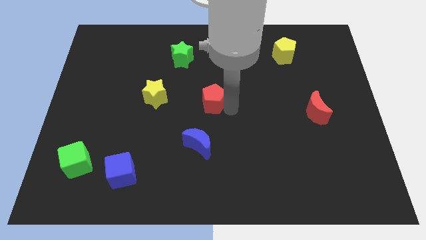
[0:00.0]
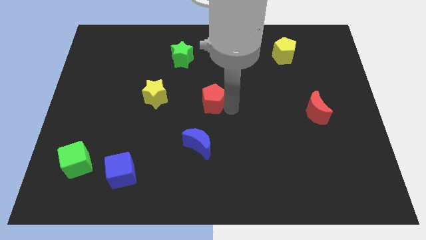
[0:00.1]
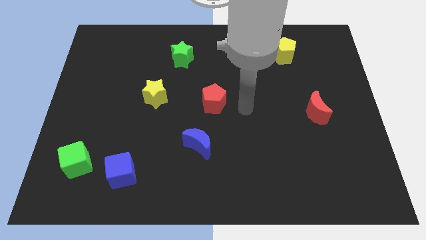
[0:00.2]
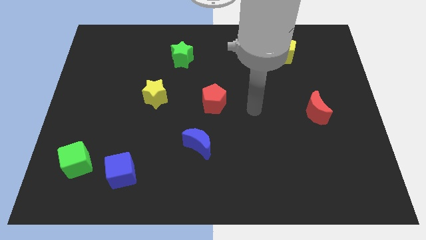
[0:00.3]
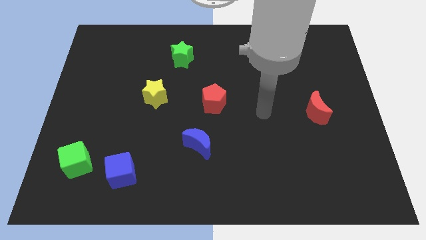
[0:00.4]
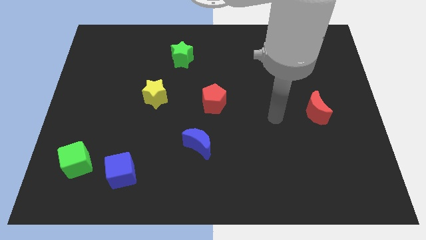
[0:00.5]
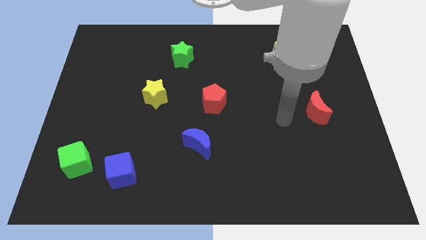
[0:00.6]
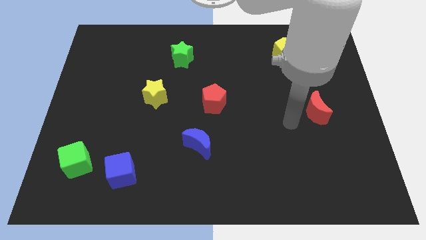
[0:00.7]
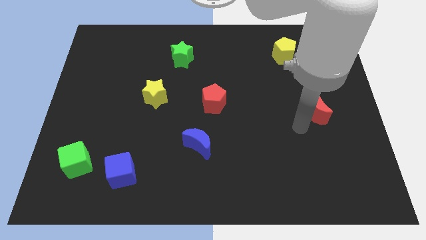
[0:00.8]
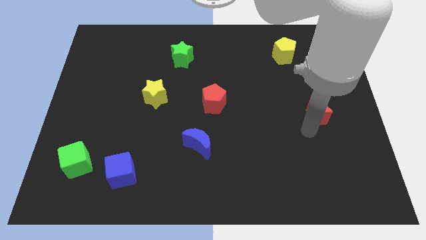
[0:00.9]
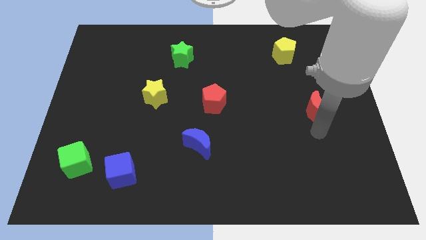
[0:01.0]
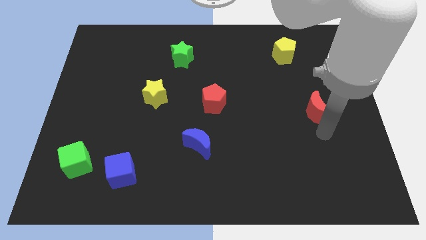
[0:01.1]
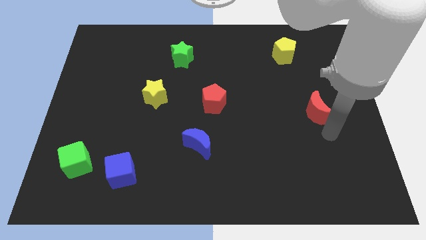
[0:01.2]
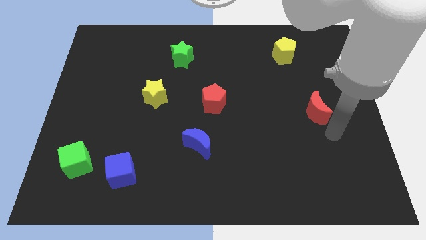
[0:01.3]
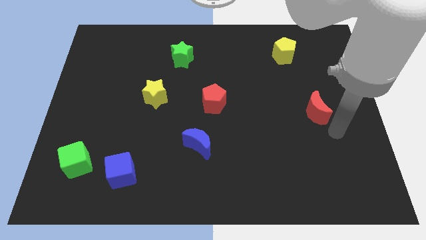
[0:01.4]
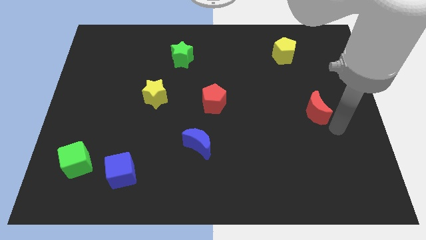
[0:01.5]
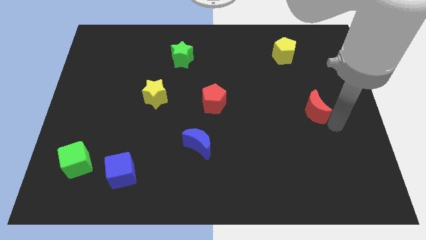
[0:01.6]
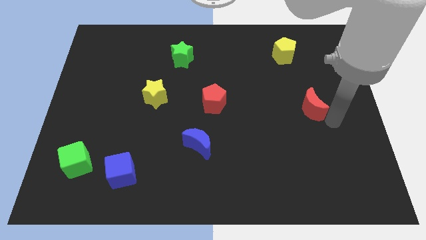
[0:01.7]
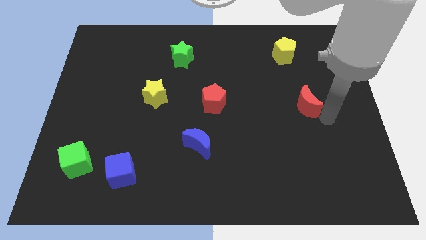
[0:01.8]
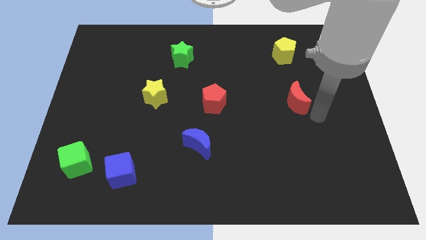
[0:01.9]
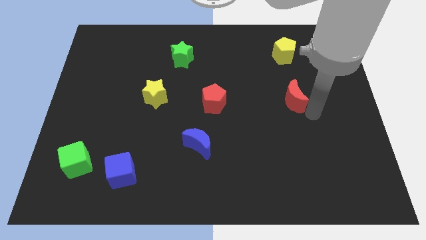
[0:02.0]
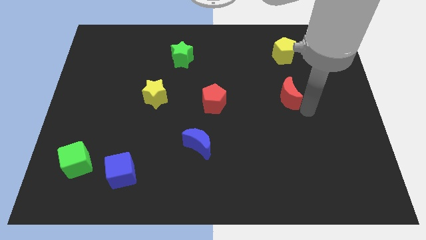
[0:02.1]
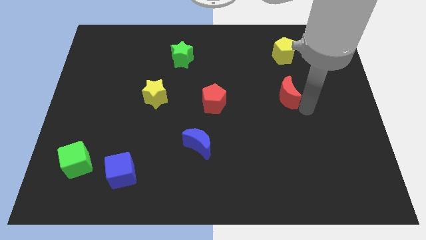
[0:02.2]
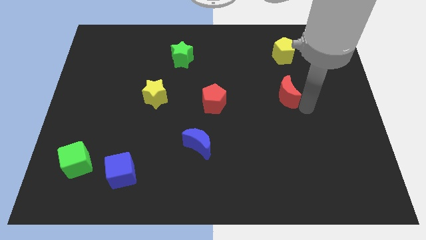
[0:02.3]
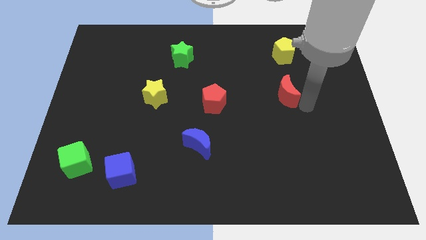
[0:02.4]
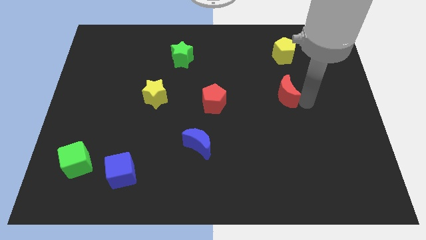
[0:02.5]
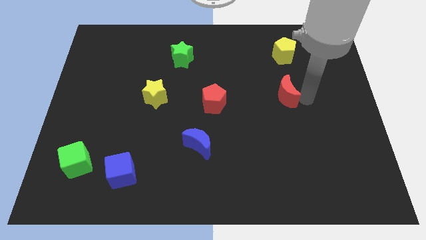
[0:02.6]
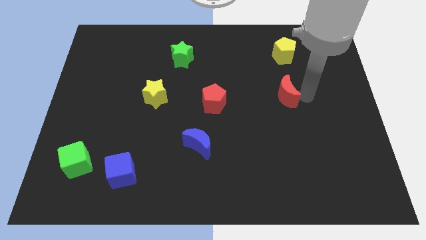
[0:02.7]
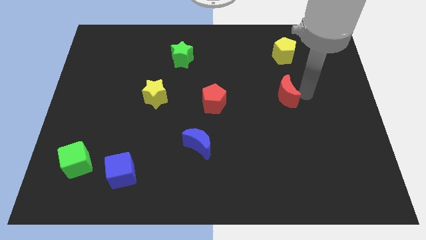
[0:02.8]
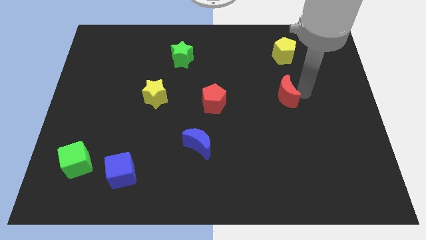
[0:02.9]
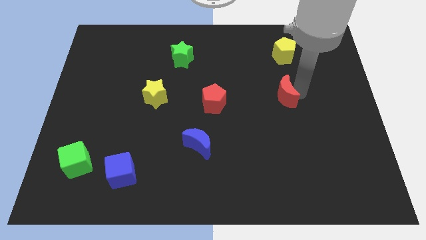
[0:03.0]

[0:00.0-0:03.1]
push the red crescent parallel to the yellow pentagon

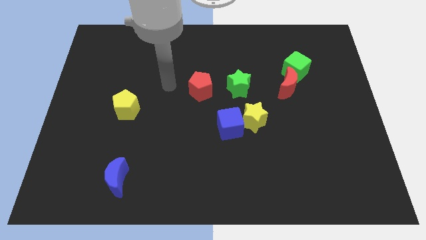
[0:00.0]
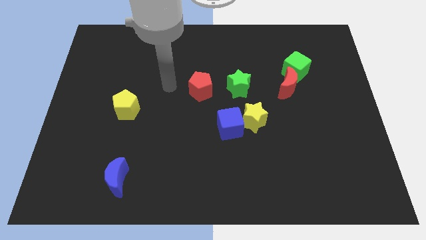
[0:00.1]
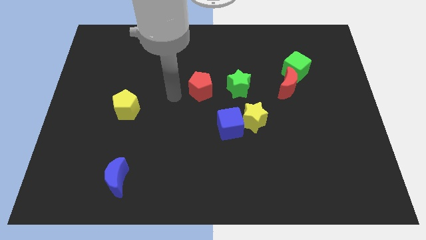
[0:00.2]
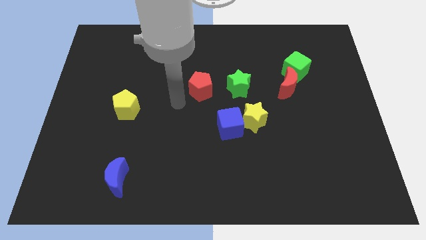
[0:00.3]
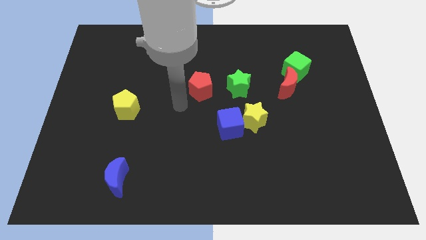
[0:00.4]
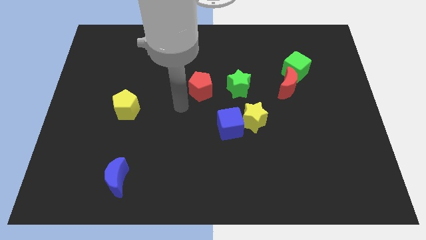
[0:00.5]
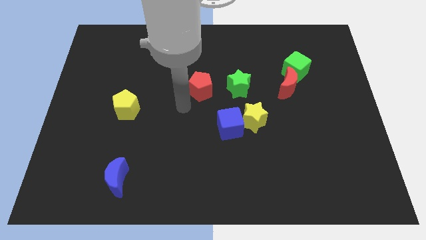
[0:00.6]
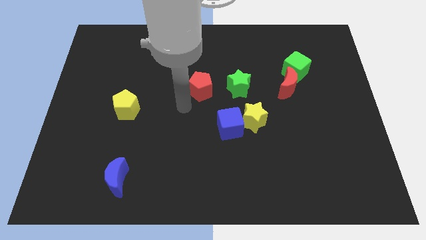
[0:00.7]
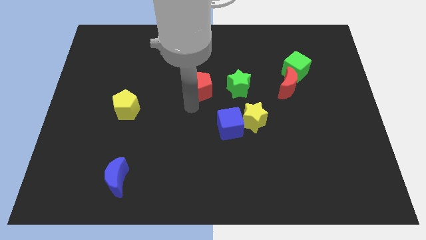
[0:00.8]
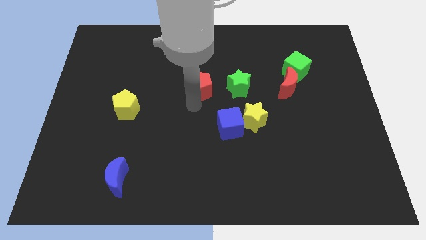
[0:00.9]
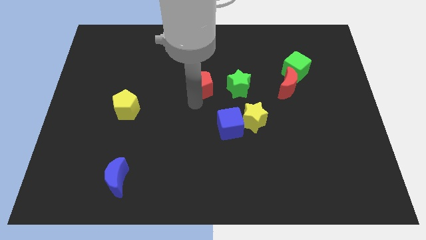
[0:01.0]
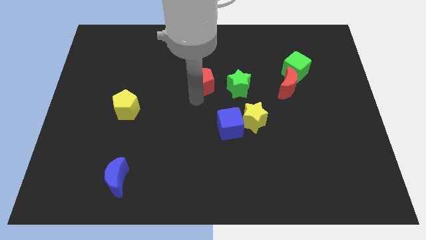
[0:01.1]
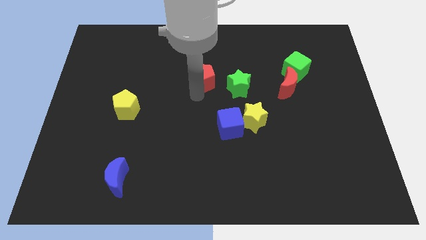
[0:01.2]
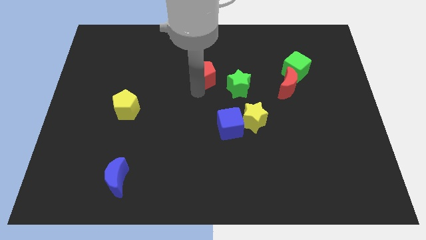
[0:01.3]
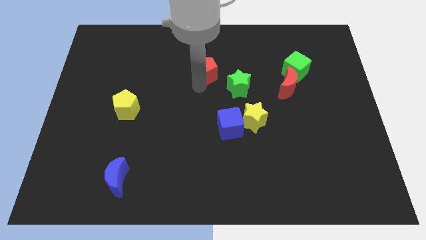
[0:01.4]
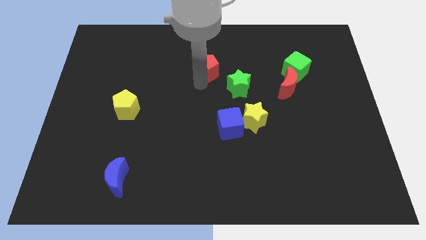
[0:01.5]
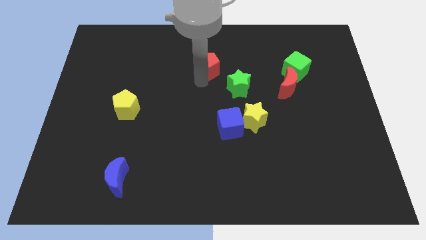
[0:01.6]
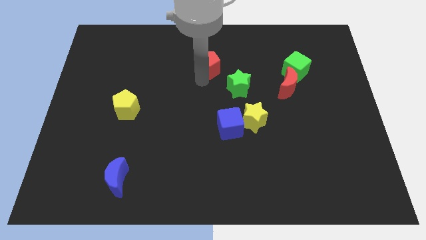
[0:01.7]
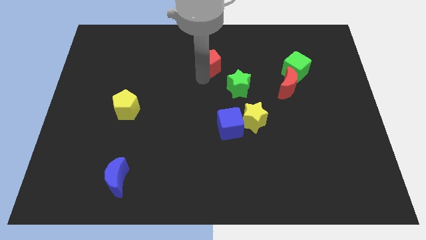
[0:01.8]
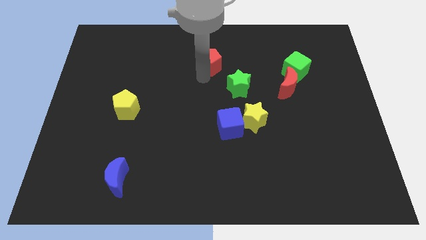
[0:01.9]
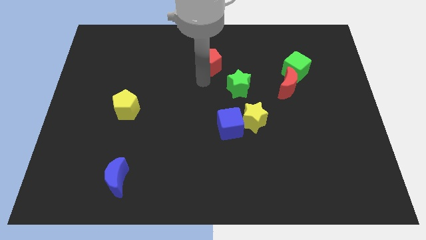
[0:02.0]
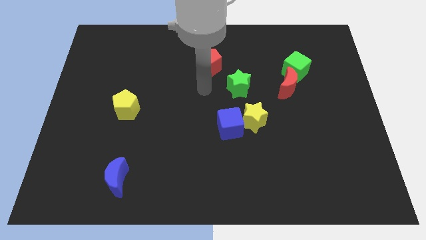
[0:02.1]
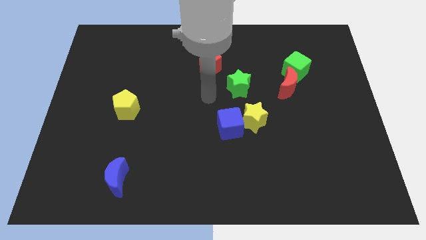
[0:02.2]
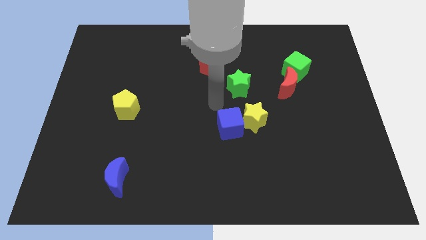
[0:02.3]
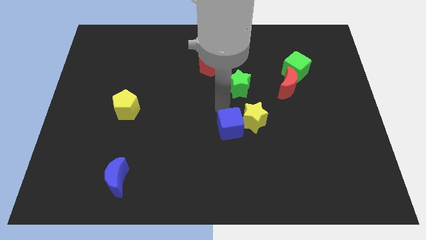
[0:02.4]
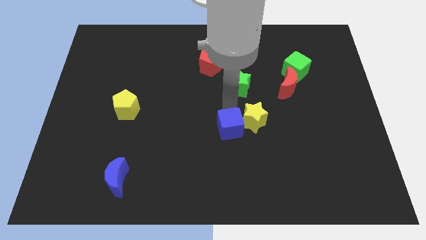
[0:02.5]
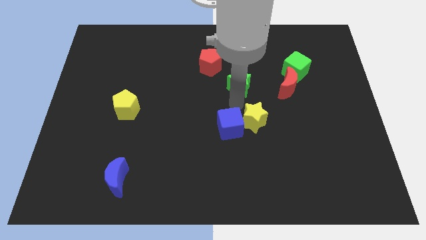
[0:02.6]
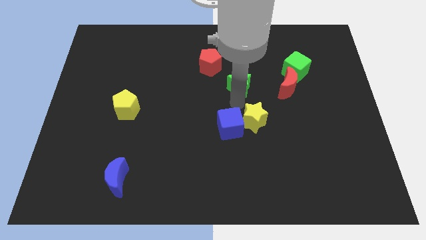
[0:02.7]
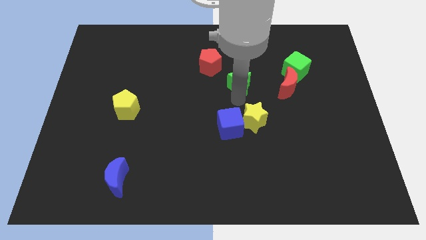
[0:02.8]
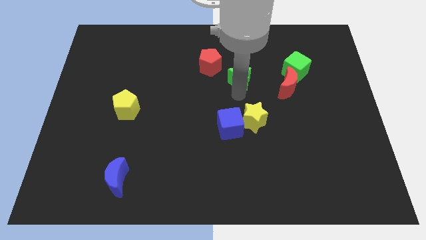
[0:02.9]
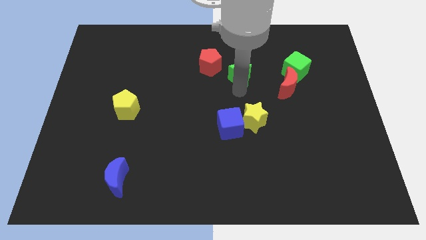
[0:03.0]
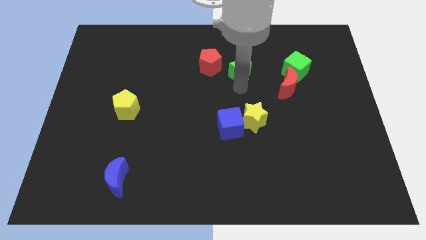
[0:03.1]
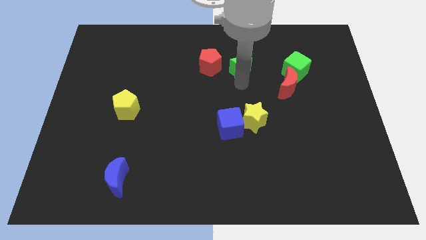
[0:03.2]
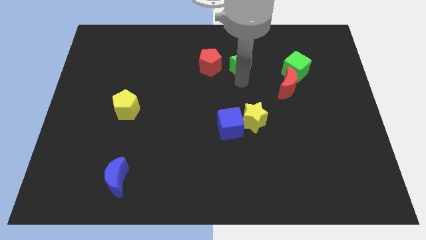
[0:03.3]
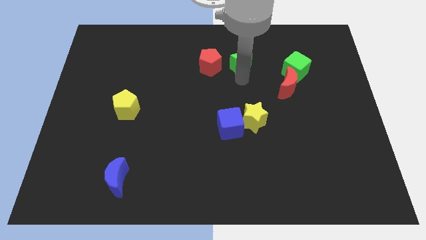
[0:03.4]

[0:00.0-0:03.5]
place green star and red pentagon towards the top center

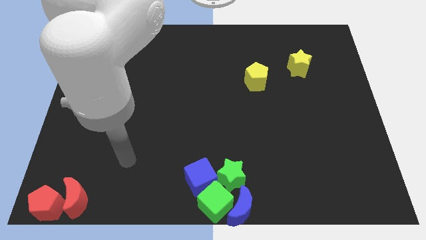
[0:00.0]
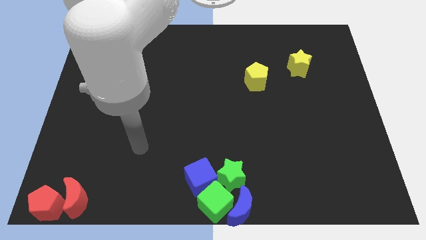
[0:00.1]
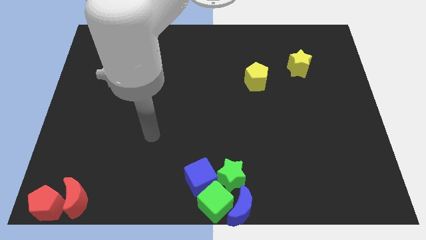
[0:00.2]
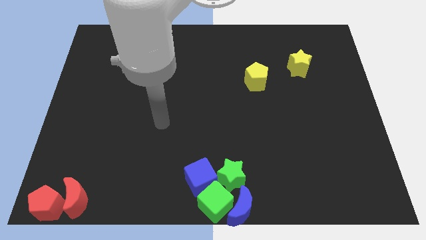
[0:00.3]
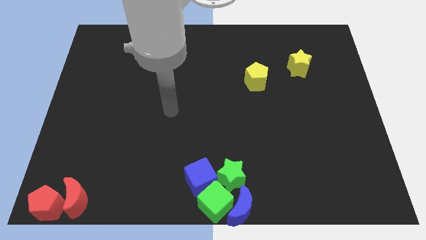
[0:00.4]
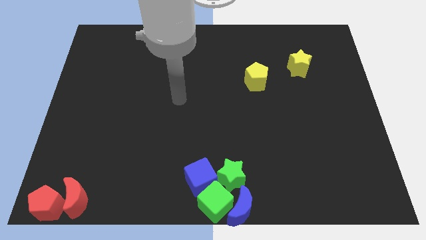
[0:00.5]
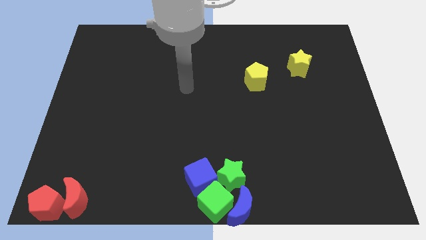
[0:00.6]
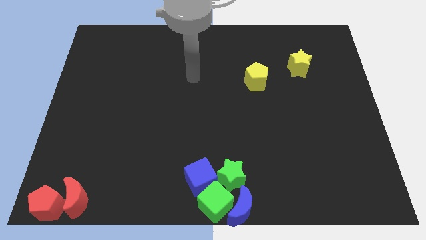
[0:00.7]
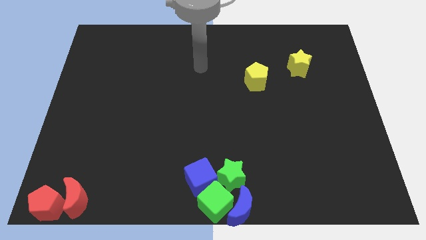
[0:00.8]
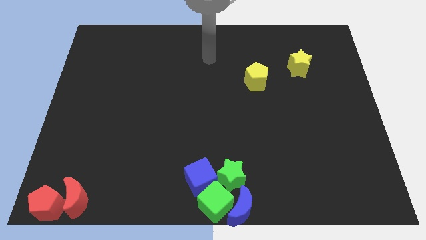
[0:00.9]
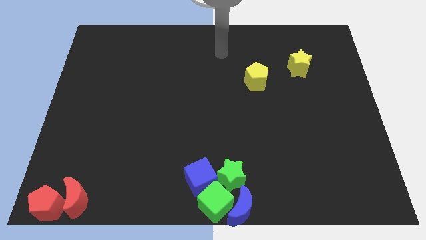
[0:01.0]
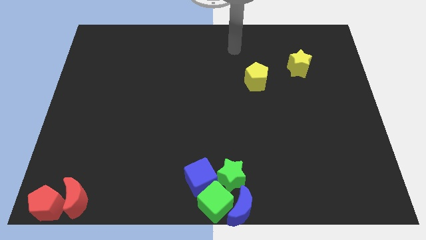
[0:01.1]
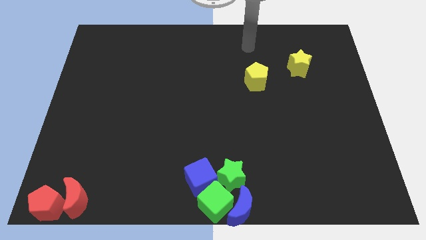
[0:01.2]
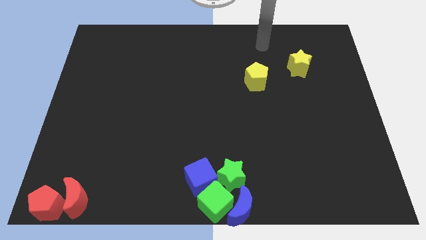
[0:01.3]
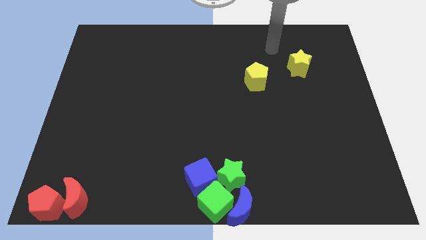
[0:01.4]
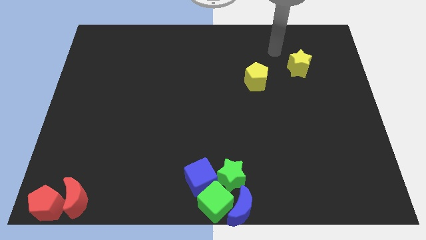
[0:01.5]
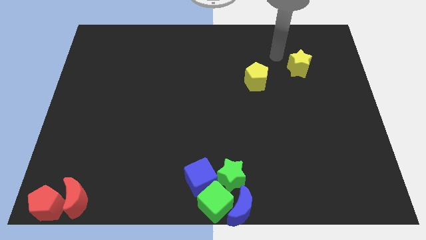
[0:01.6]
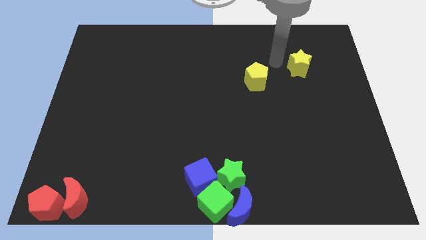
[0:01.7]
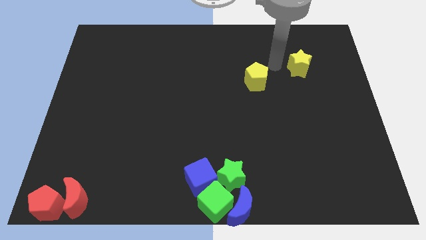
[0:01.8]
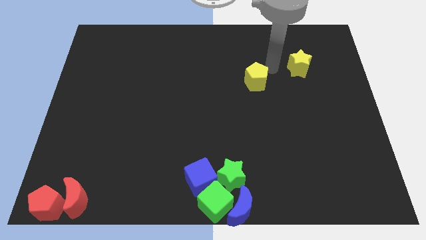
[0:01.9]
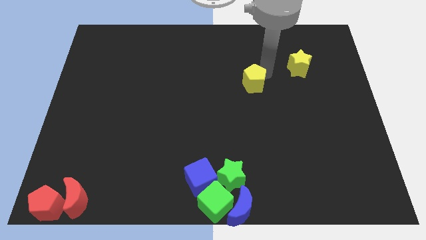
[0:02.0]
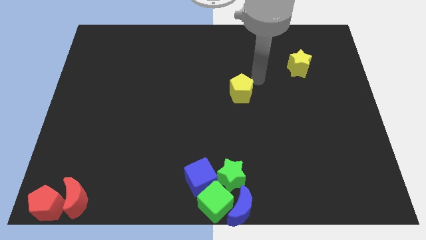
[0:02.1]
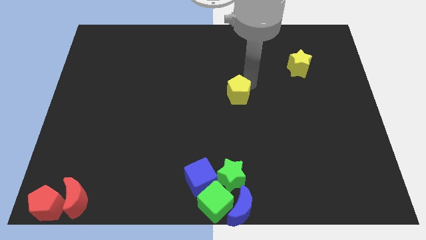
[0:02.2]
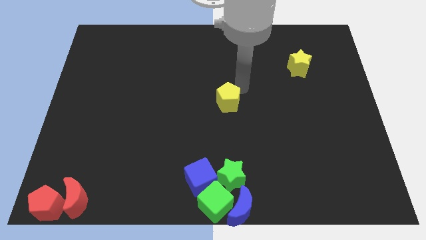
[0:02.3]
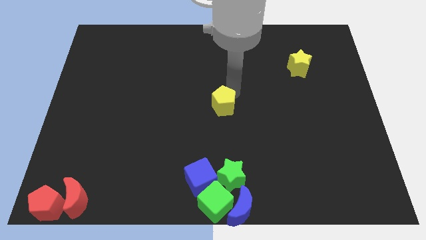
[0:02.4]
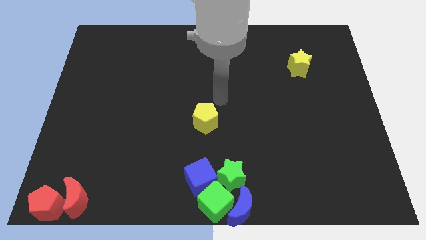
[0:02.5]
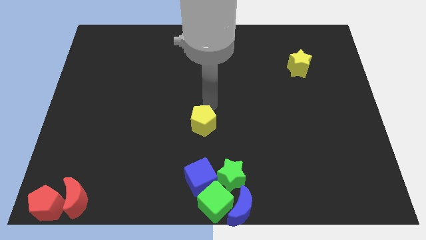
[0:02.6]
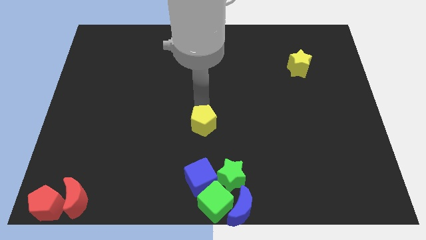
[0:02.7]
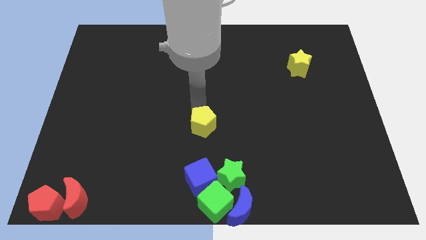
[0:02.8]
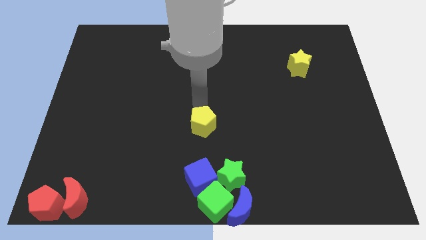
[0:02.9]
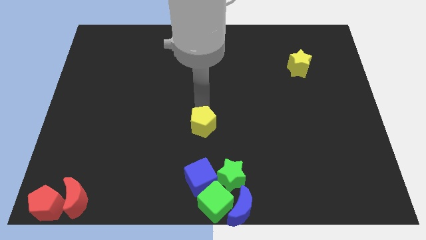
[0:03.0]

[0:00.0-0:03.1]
slide yellow pentagon on top of blue cube
